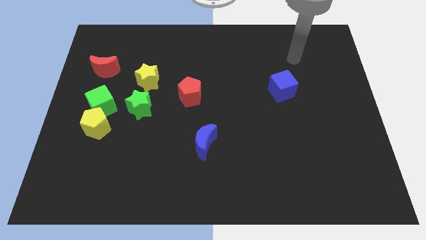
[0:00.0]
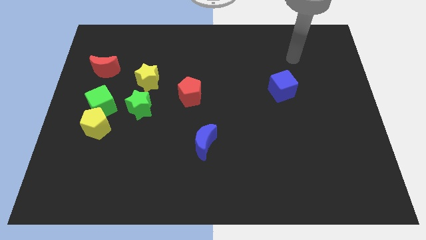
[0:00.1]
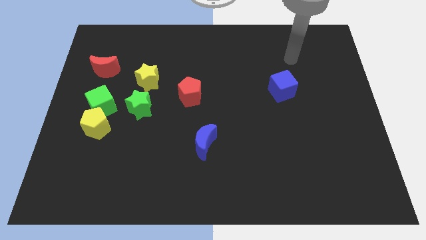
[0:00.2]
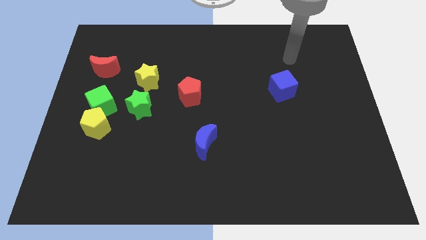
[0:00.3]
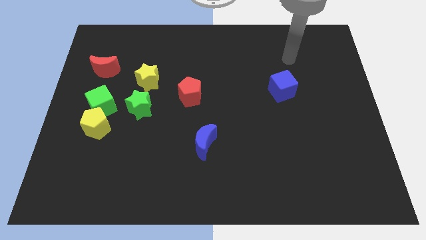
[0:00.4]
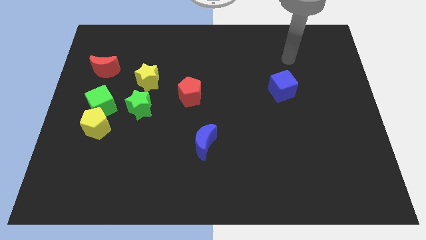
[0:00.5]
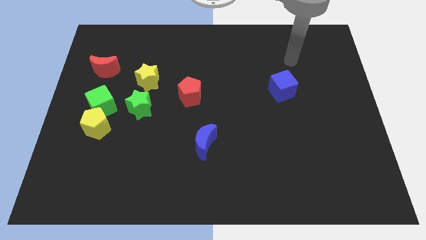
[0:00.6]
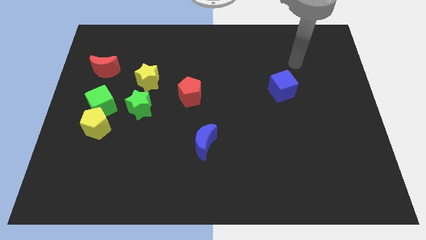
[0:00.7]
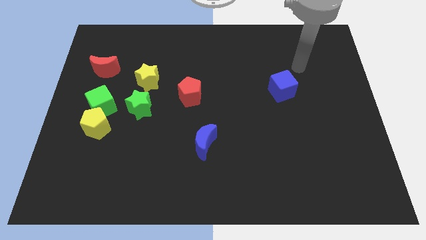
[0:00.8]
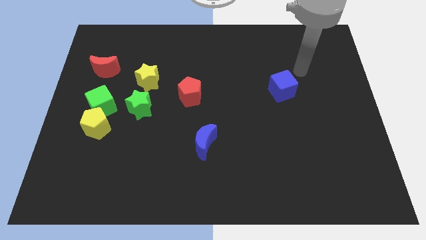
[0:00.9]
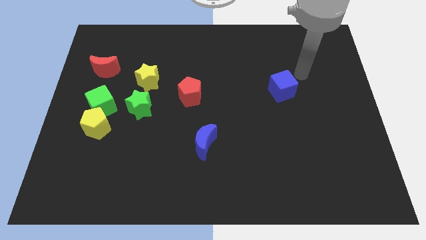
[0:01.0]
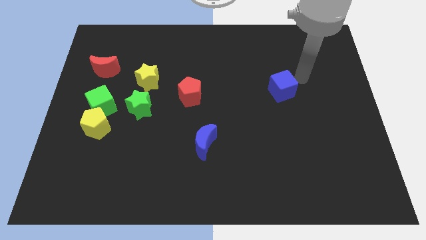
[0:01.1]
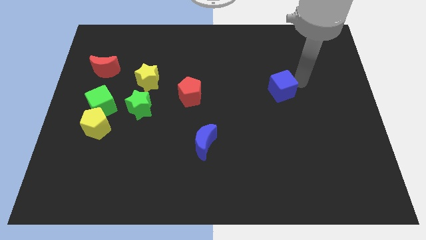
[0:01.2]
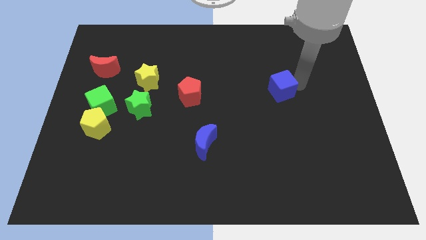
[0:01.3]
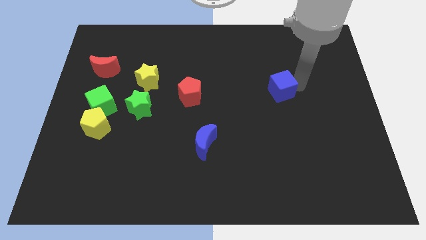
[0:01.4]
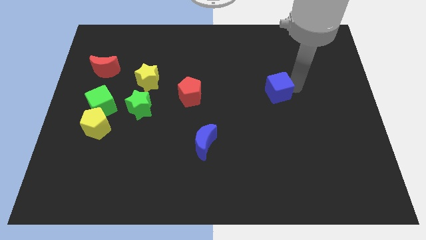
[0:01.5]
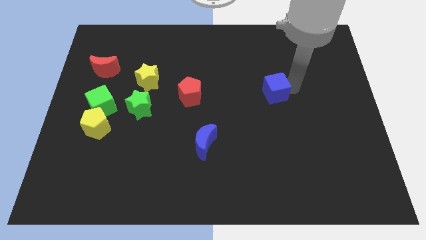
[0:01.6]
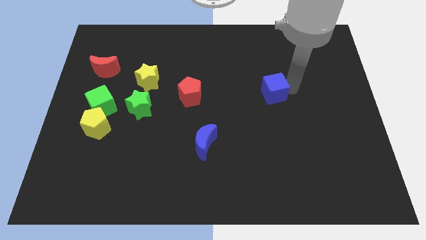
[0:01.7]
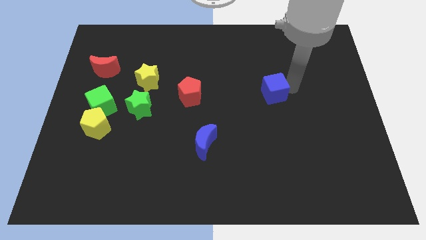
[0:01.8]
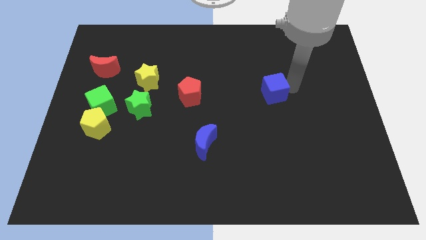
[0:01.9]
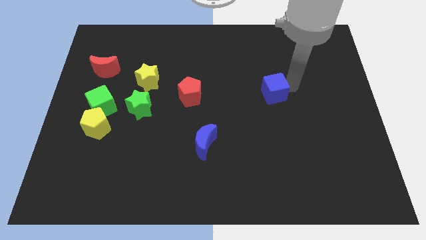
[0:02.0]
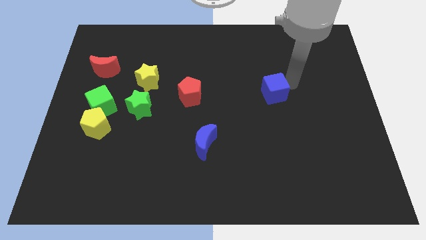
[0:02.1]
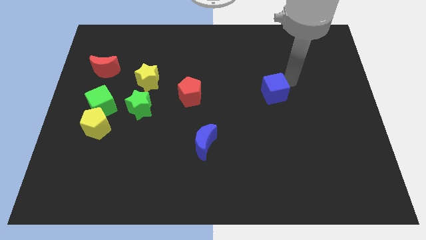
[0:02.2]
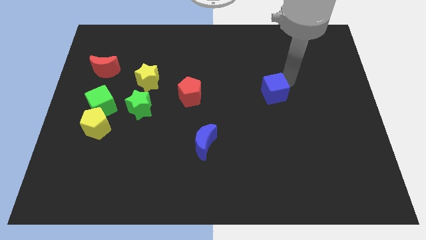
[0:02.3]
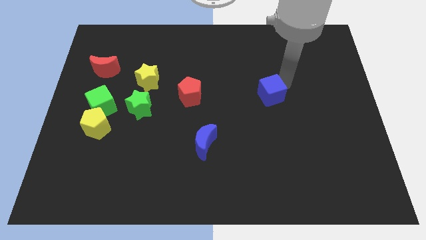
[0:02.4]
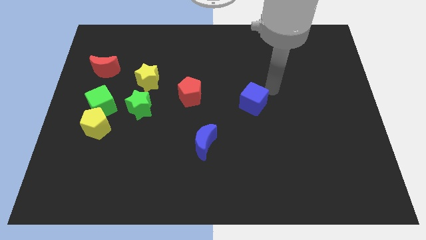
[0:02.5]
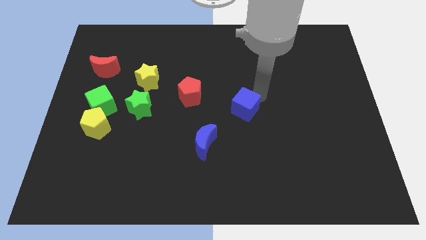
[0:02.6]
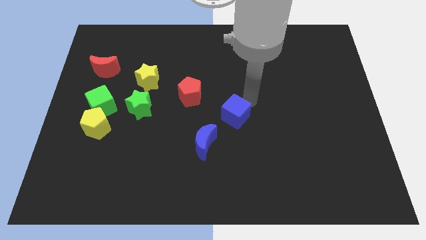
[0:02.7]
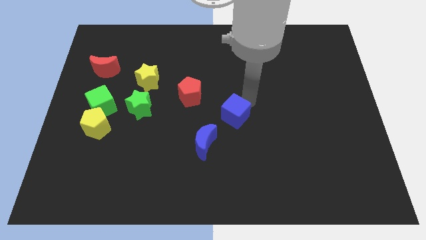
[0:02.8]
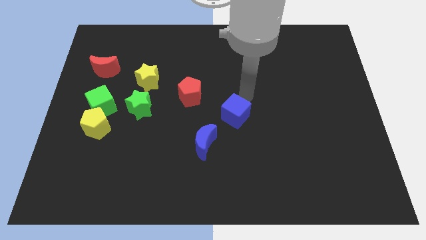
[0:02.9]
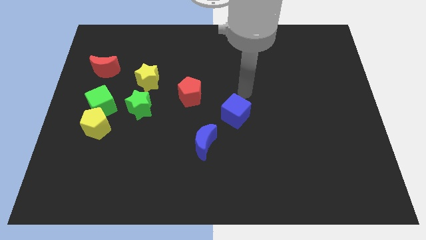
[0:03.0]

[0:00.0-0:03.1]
slide the blue cube diagonally bottom right to the red pentagon

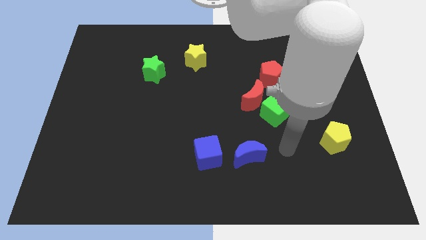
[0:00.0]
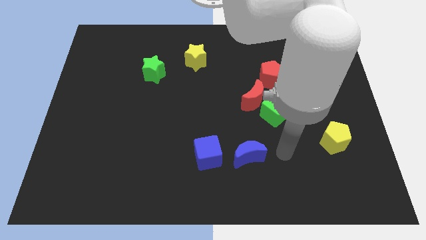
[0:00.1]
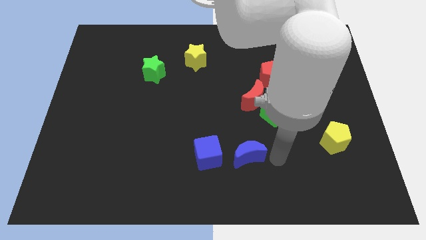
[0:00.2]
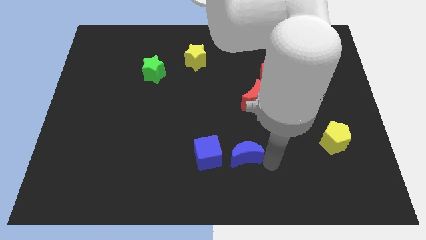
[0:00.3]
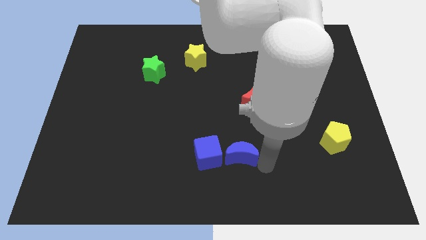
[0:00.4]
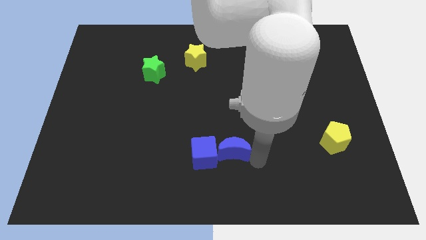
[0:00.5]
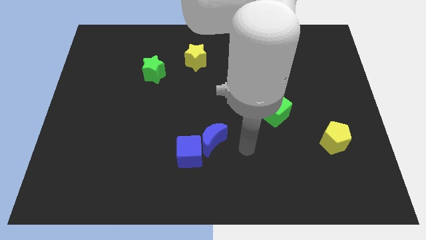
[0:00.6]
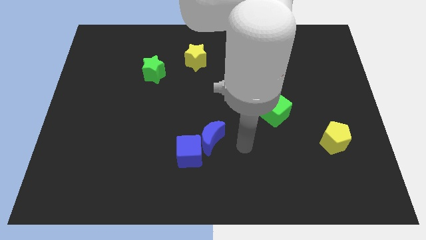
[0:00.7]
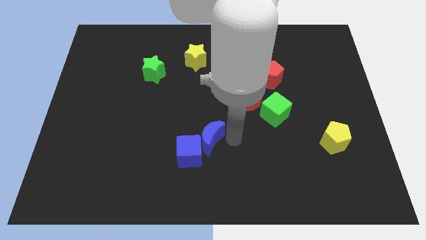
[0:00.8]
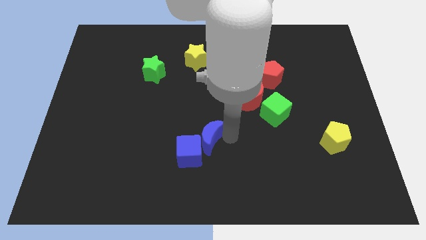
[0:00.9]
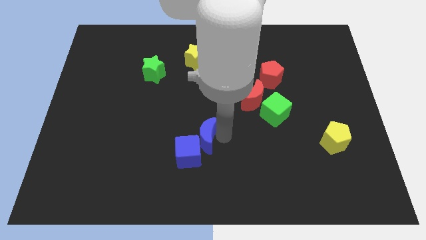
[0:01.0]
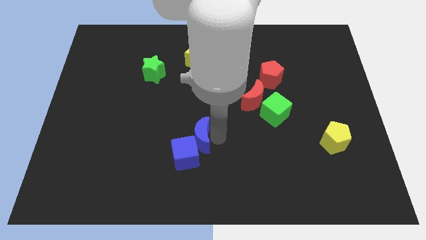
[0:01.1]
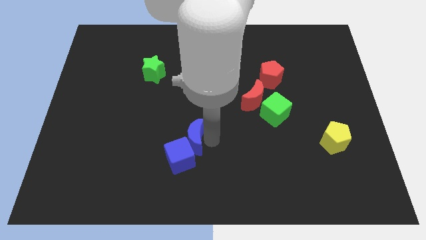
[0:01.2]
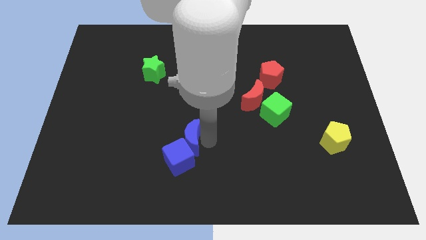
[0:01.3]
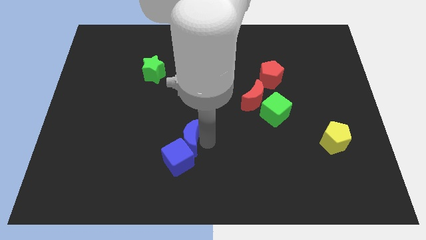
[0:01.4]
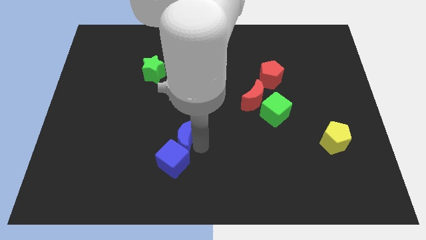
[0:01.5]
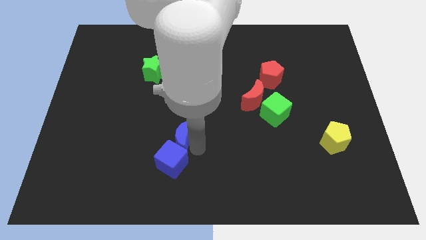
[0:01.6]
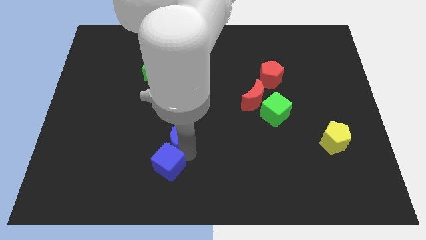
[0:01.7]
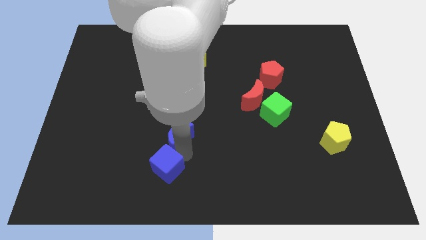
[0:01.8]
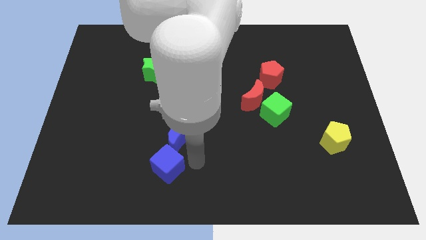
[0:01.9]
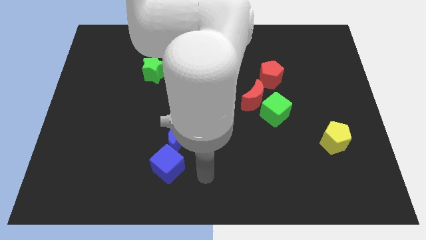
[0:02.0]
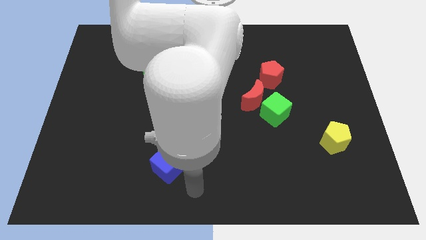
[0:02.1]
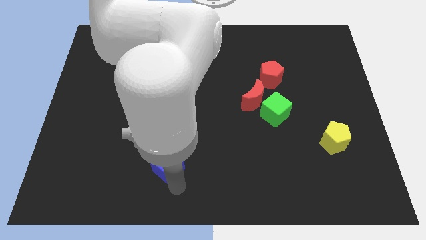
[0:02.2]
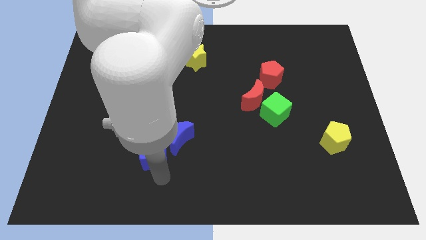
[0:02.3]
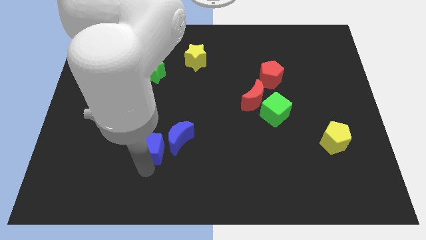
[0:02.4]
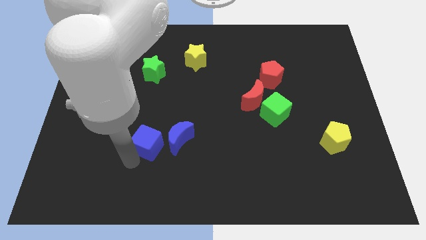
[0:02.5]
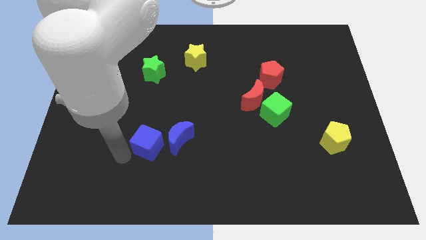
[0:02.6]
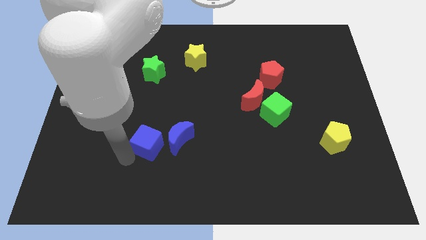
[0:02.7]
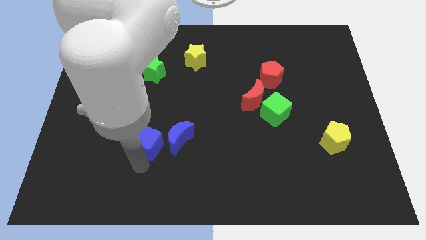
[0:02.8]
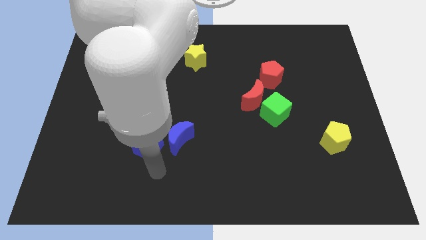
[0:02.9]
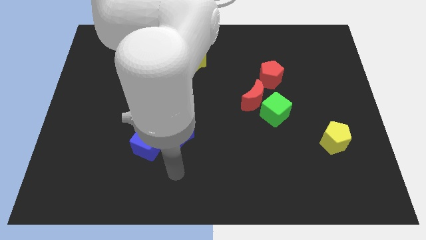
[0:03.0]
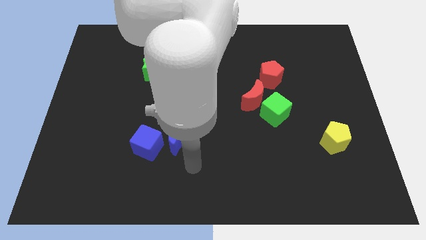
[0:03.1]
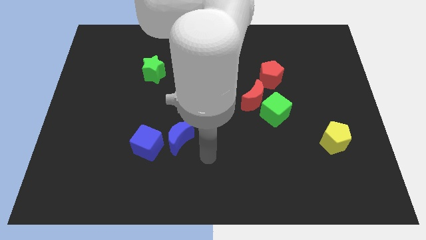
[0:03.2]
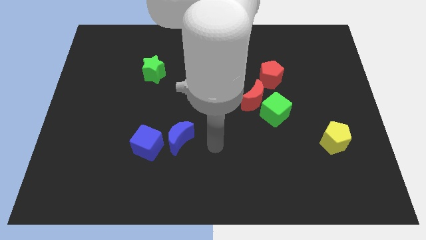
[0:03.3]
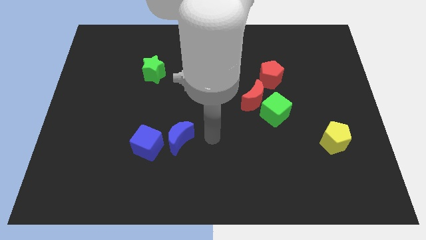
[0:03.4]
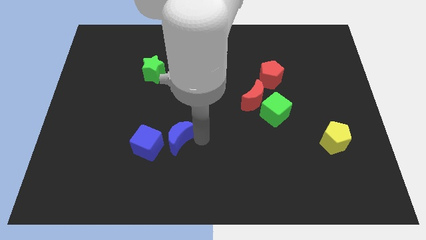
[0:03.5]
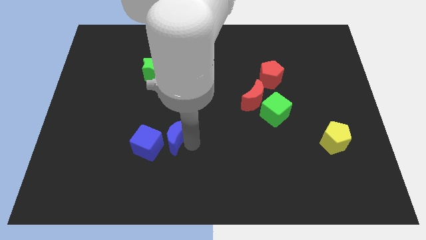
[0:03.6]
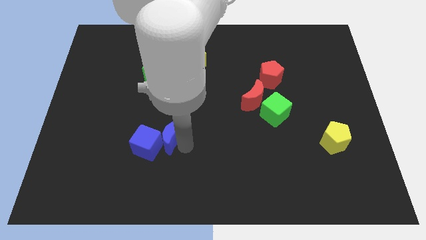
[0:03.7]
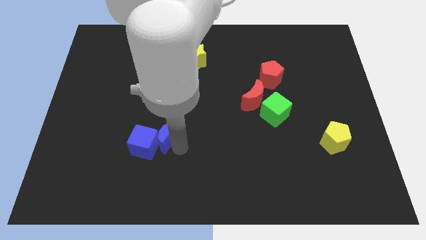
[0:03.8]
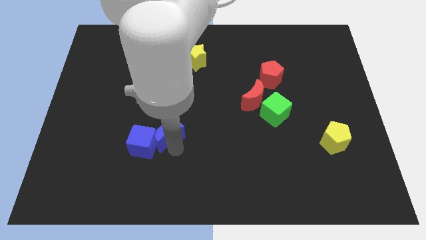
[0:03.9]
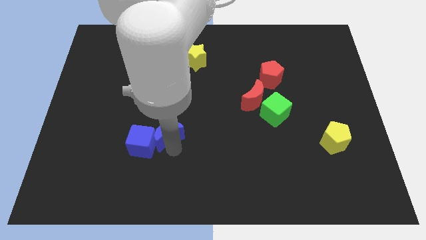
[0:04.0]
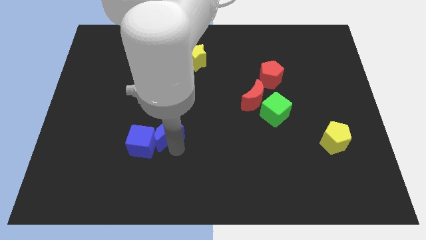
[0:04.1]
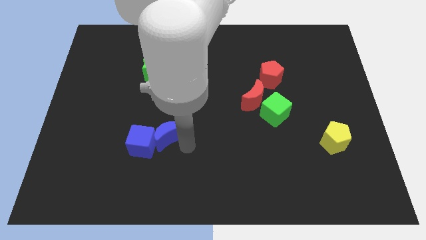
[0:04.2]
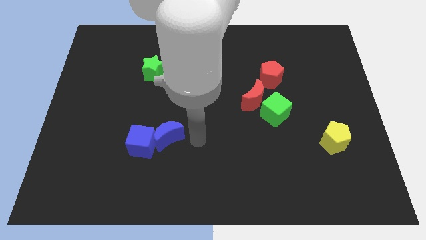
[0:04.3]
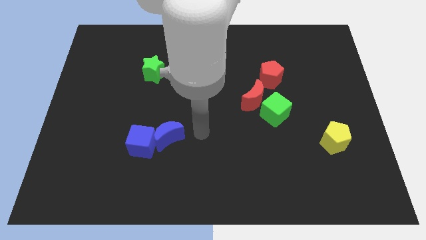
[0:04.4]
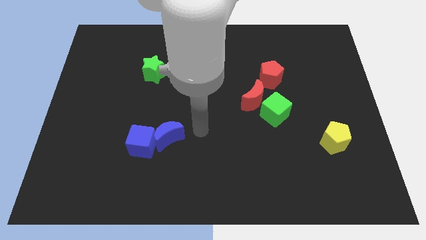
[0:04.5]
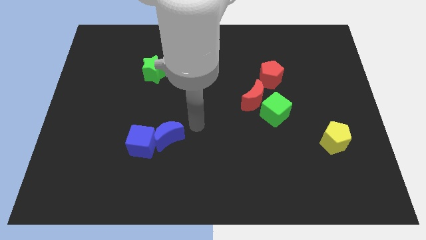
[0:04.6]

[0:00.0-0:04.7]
move the blue crescent and cube below the green star

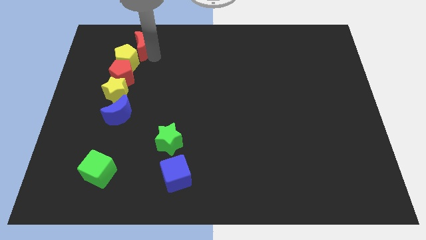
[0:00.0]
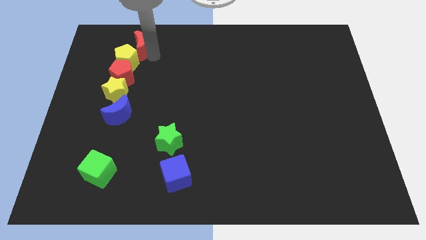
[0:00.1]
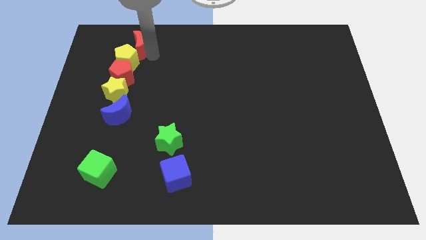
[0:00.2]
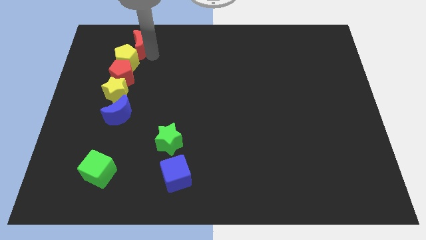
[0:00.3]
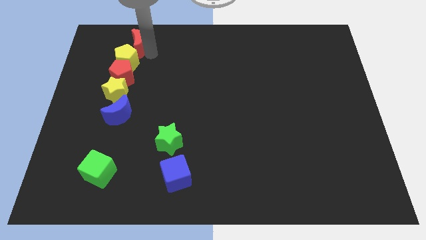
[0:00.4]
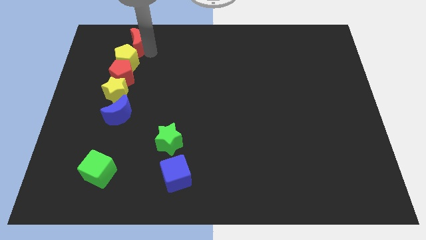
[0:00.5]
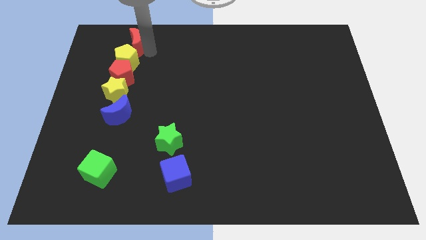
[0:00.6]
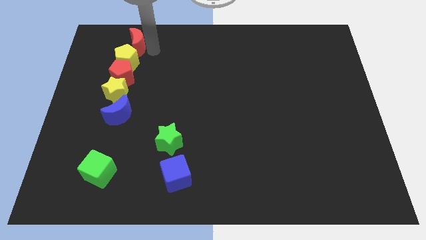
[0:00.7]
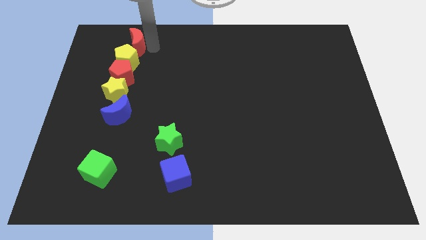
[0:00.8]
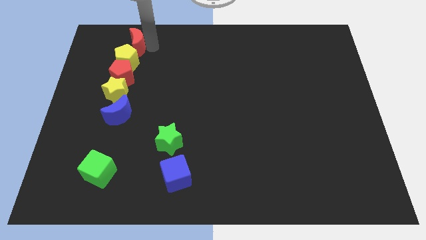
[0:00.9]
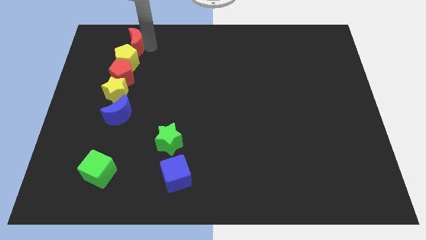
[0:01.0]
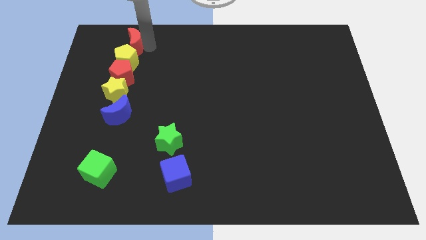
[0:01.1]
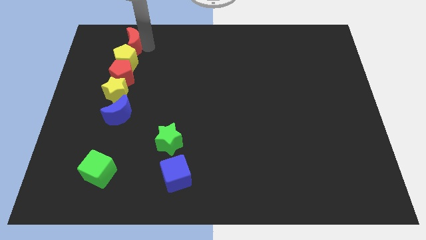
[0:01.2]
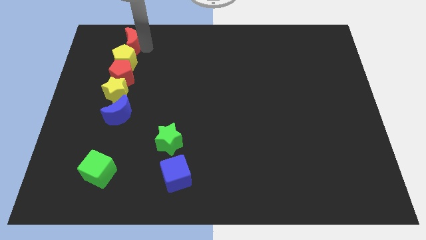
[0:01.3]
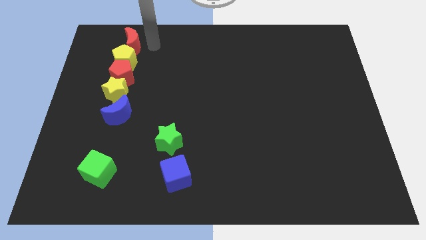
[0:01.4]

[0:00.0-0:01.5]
move the red moon above the yellow pentagon
